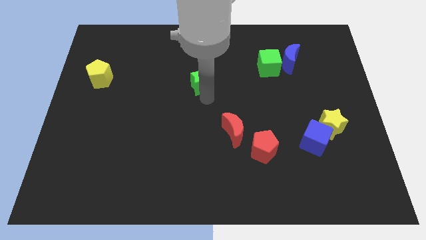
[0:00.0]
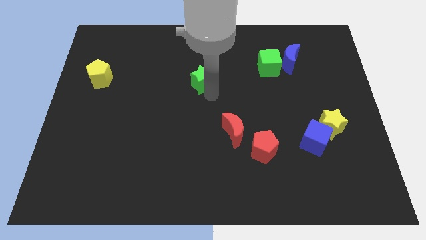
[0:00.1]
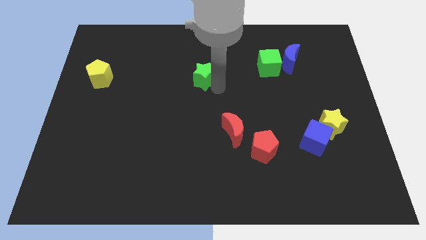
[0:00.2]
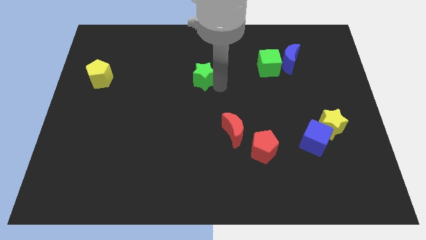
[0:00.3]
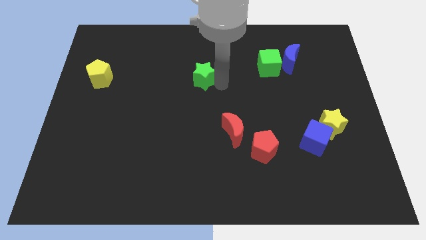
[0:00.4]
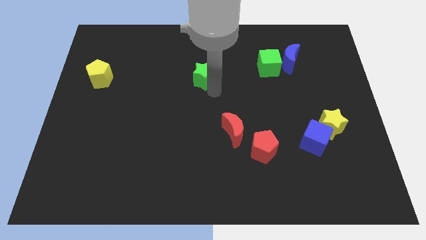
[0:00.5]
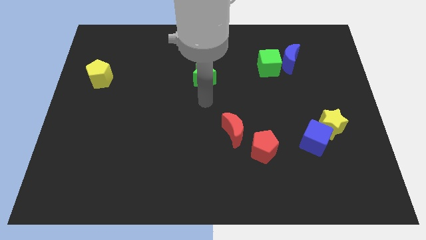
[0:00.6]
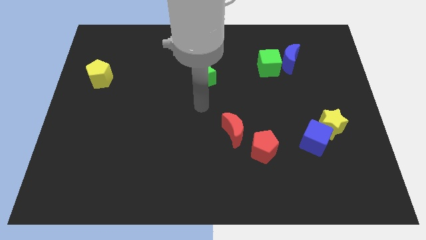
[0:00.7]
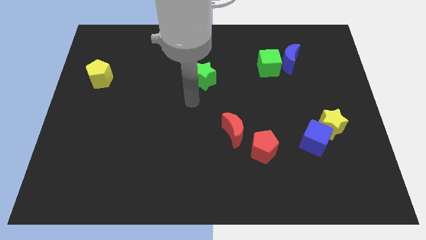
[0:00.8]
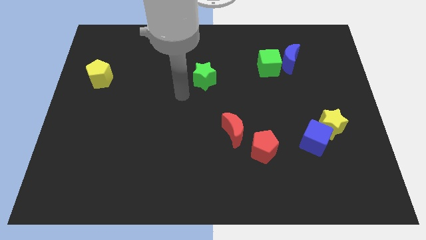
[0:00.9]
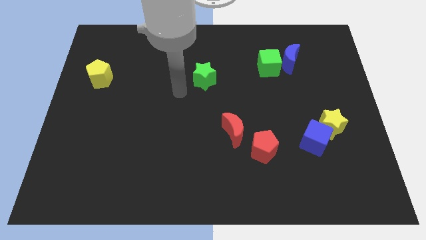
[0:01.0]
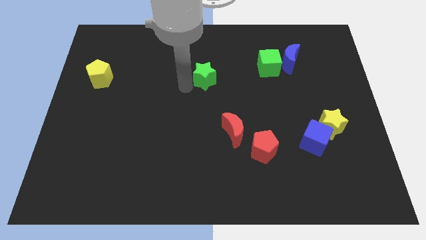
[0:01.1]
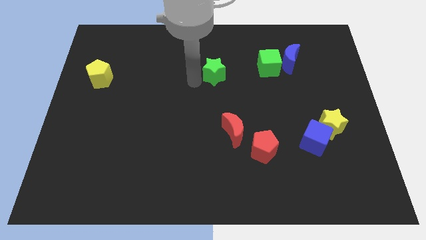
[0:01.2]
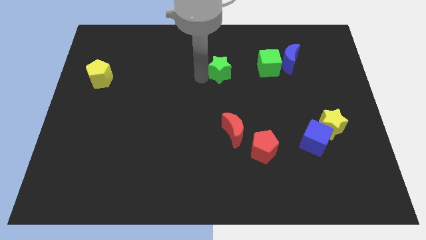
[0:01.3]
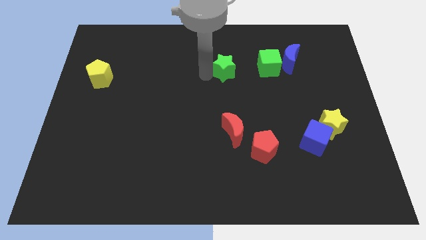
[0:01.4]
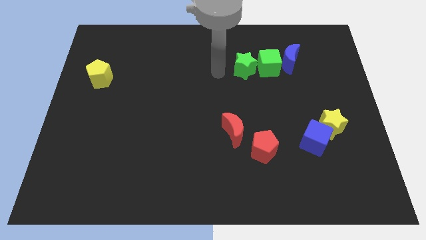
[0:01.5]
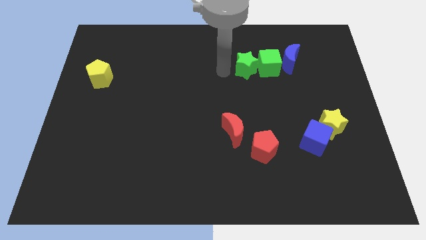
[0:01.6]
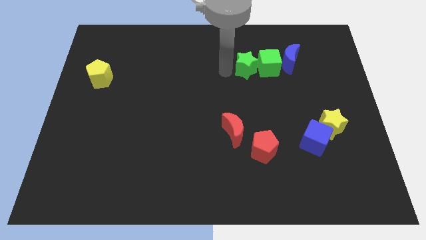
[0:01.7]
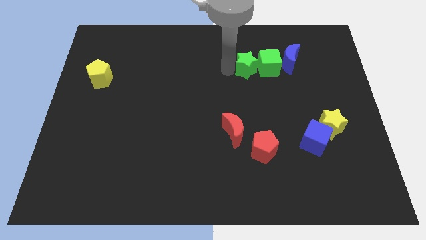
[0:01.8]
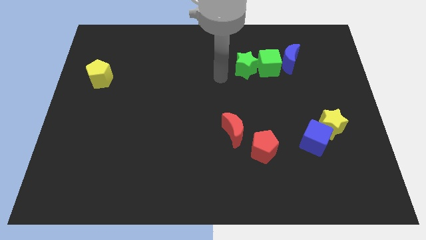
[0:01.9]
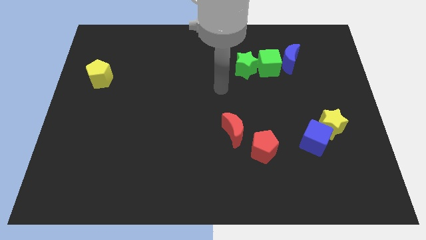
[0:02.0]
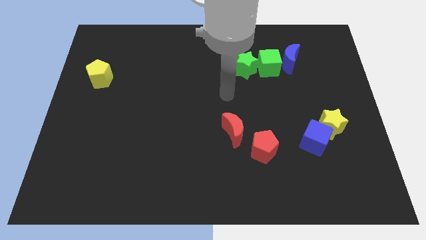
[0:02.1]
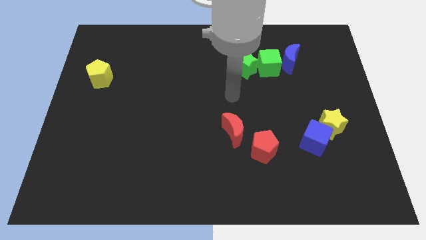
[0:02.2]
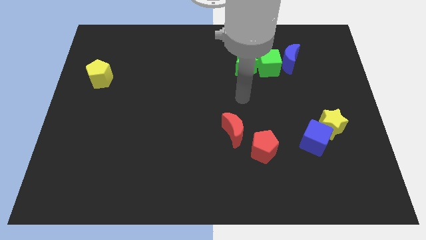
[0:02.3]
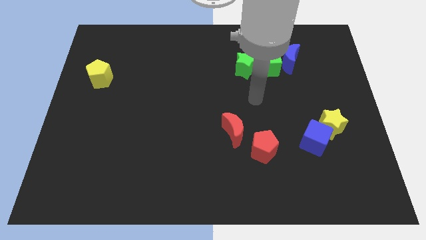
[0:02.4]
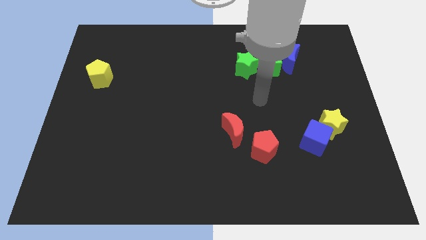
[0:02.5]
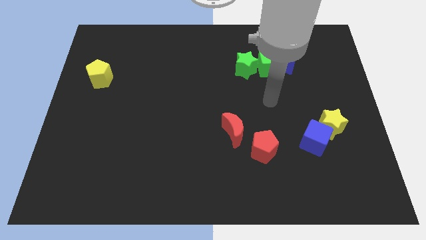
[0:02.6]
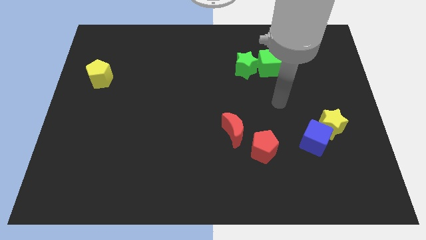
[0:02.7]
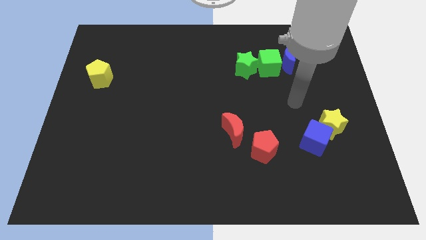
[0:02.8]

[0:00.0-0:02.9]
move the green star into left of the green cube

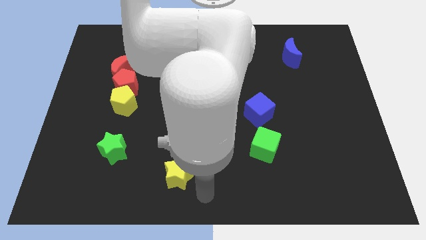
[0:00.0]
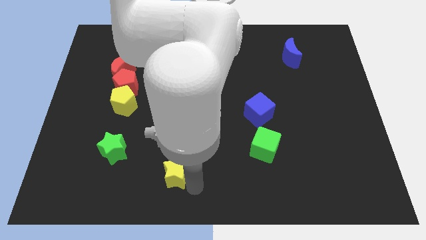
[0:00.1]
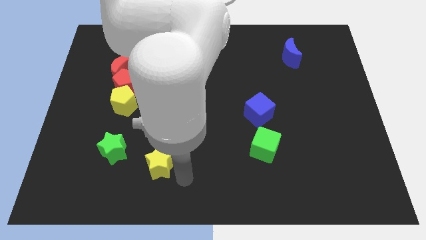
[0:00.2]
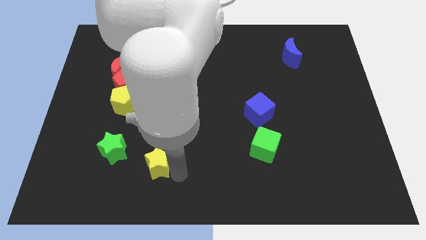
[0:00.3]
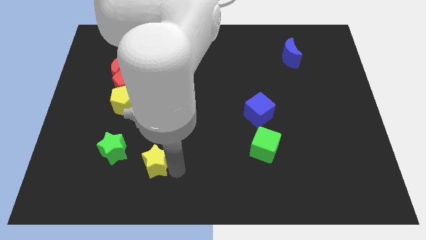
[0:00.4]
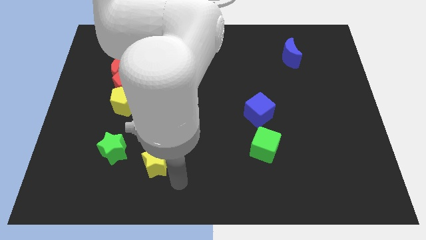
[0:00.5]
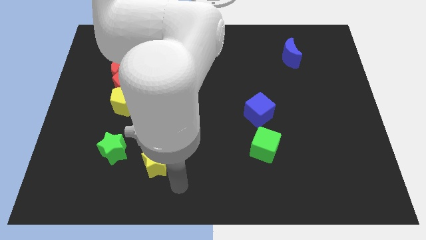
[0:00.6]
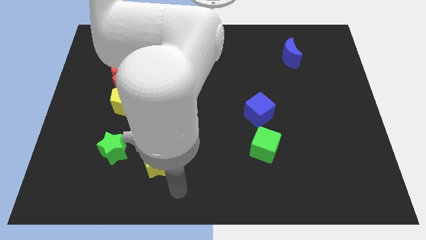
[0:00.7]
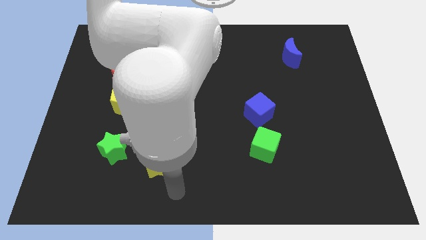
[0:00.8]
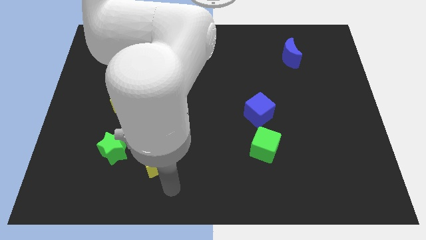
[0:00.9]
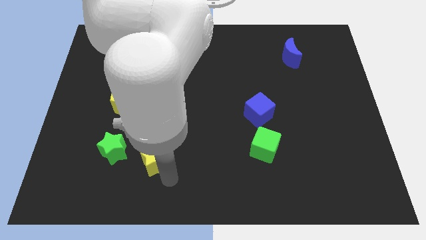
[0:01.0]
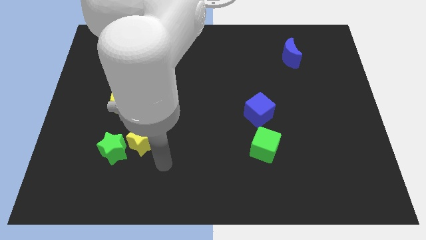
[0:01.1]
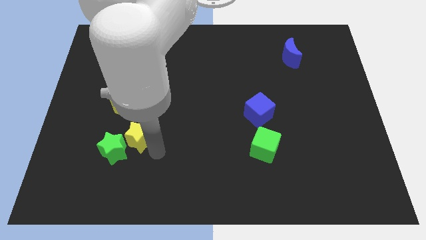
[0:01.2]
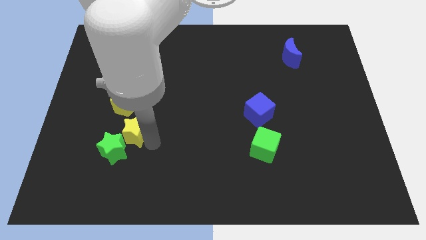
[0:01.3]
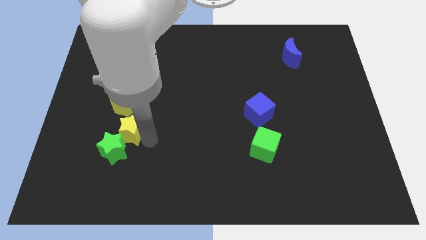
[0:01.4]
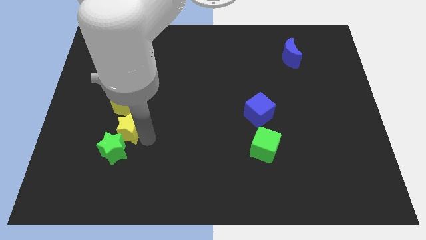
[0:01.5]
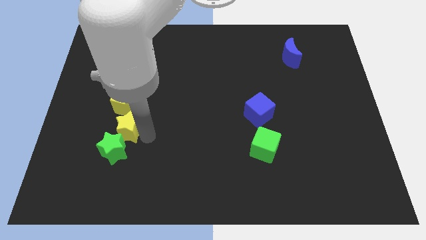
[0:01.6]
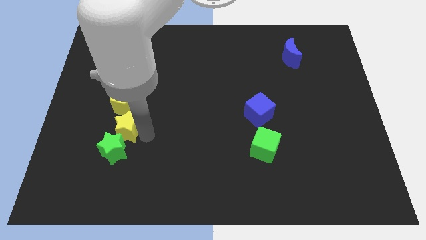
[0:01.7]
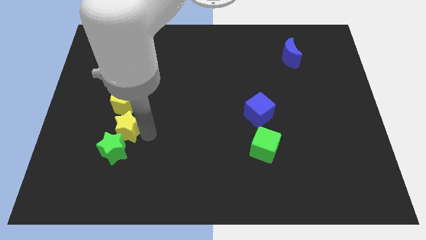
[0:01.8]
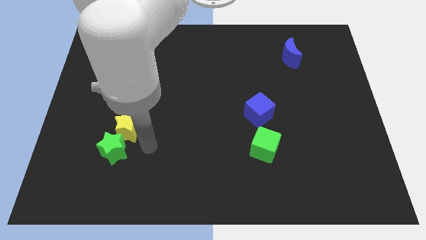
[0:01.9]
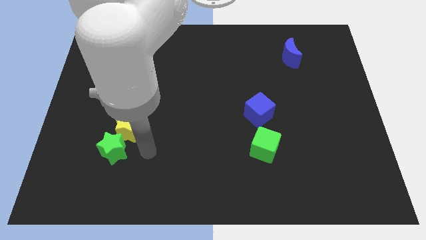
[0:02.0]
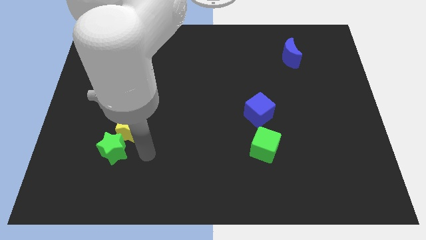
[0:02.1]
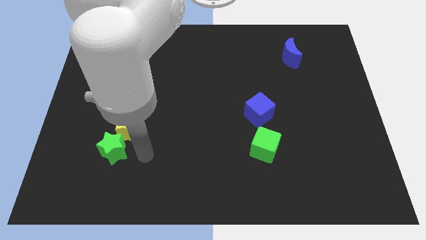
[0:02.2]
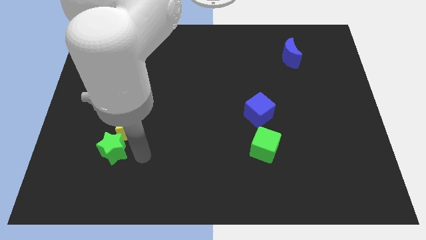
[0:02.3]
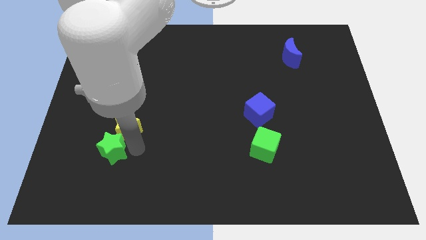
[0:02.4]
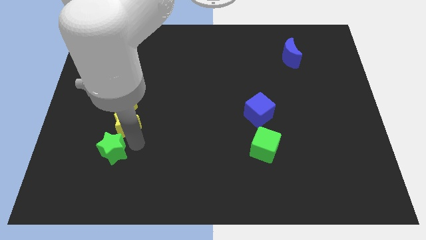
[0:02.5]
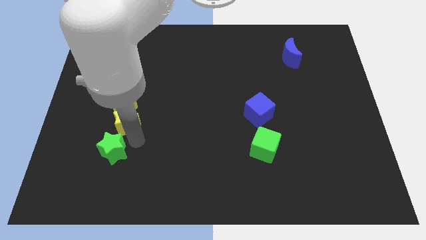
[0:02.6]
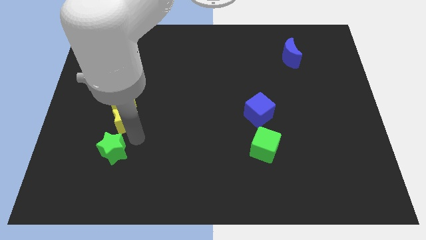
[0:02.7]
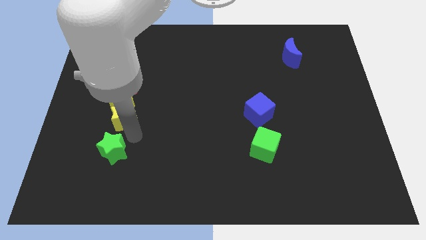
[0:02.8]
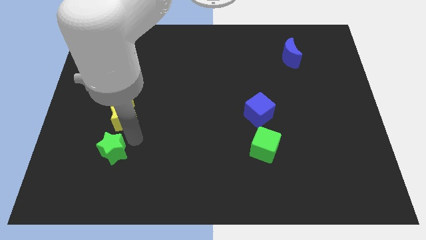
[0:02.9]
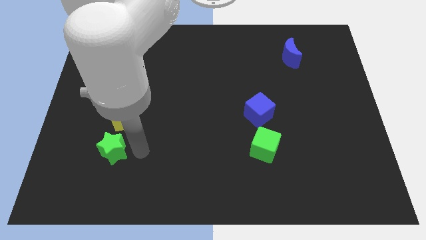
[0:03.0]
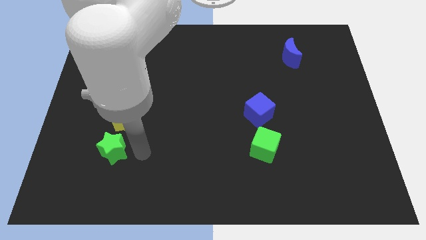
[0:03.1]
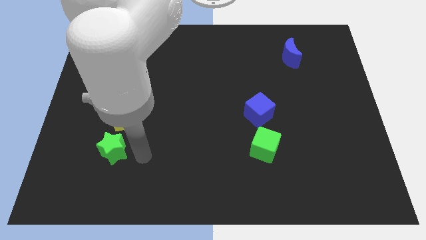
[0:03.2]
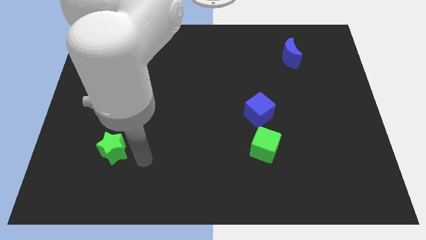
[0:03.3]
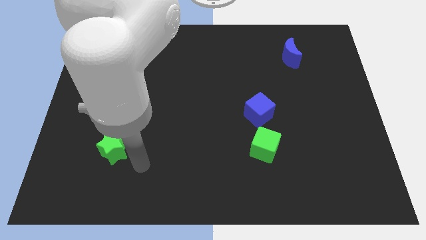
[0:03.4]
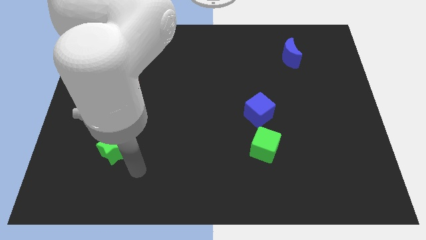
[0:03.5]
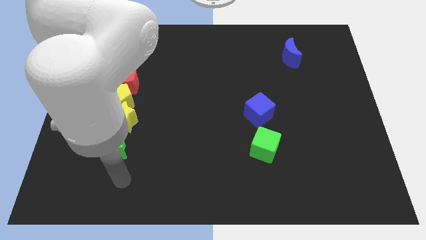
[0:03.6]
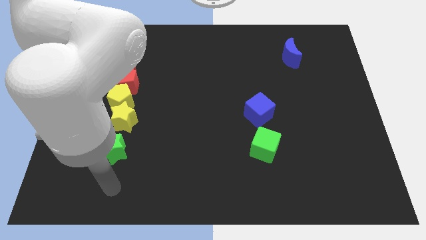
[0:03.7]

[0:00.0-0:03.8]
place yellow star down to the yellow pentagon

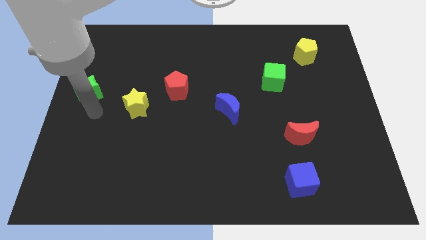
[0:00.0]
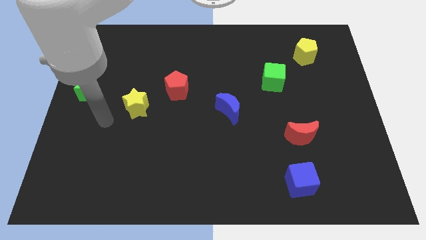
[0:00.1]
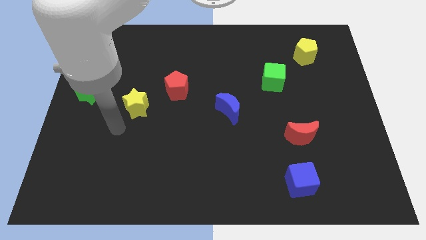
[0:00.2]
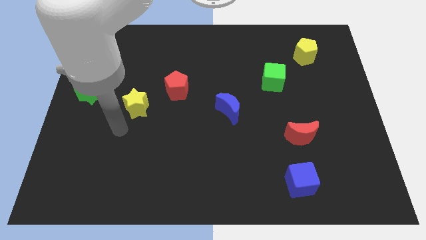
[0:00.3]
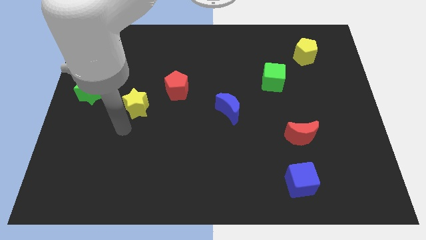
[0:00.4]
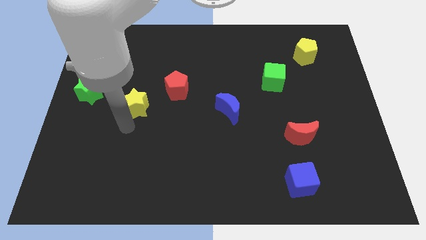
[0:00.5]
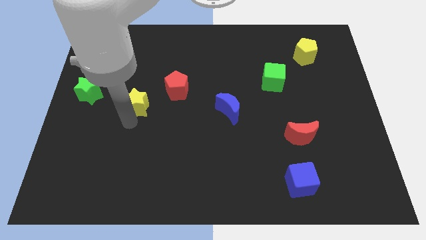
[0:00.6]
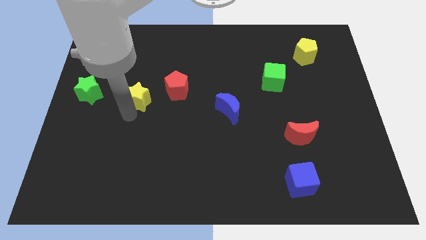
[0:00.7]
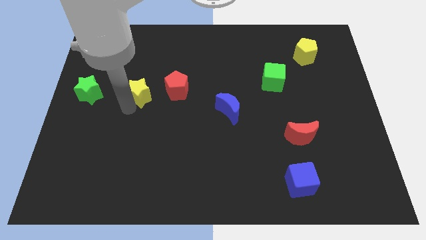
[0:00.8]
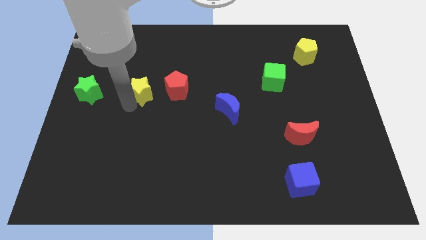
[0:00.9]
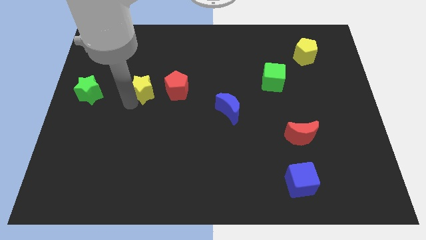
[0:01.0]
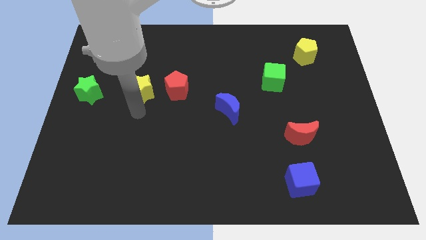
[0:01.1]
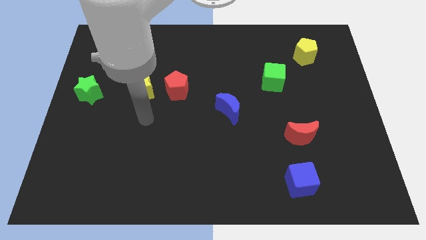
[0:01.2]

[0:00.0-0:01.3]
move the yellow star to the left of the red pentagon

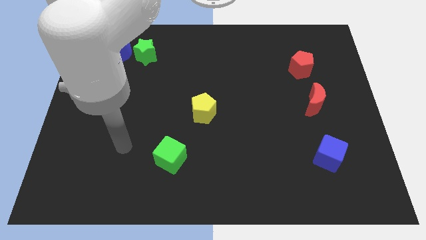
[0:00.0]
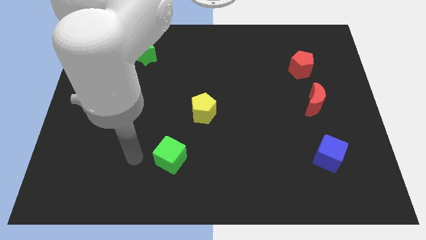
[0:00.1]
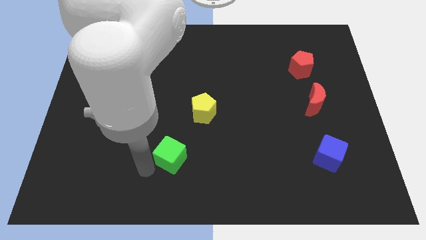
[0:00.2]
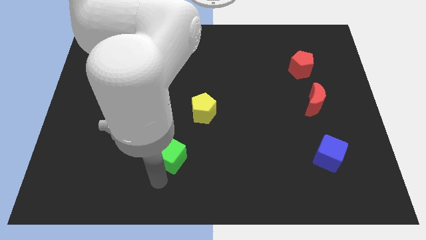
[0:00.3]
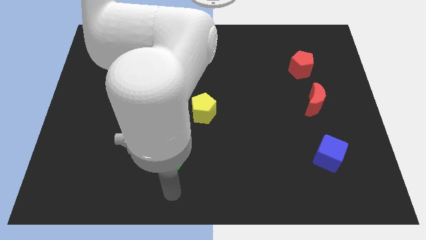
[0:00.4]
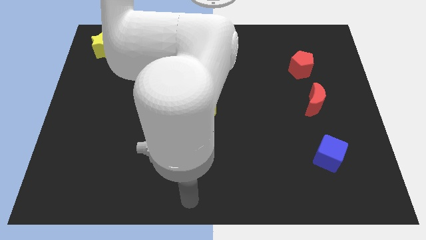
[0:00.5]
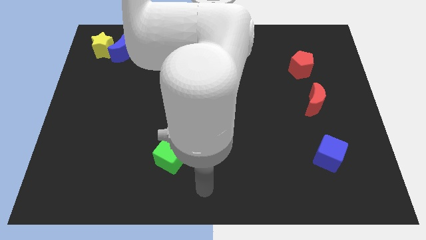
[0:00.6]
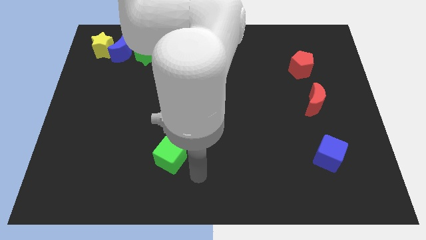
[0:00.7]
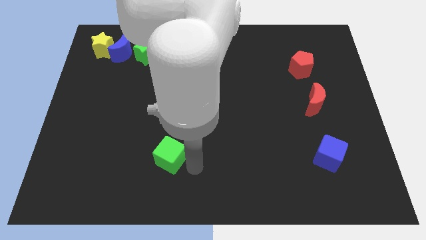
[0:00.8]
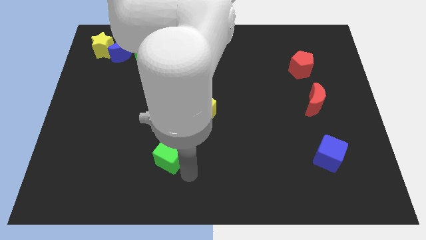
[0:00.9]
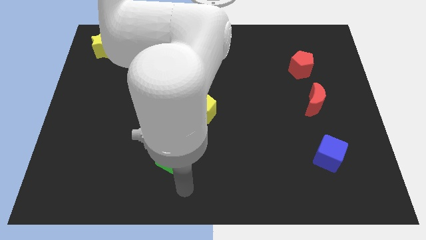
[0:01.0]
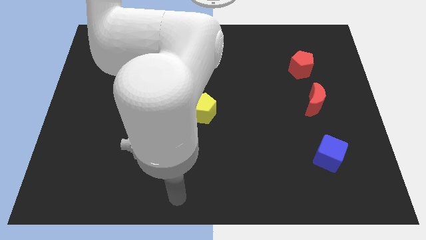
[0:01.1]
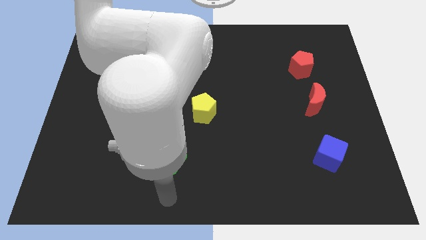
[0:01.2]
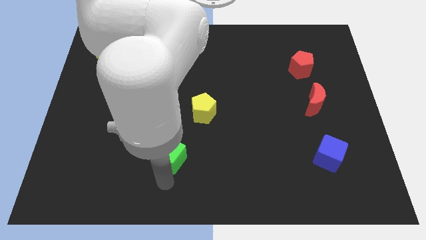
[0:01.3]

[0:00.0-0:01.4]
point your arm at the bottom of the green cube
